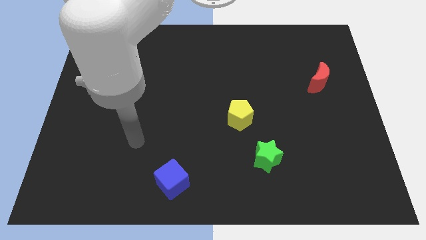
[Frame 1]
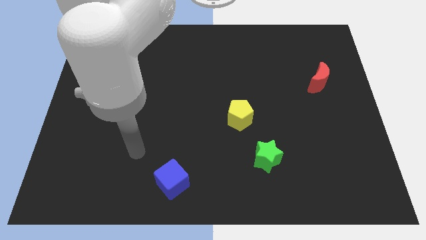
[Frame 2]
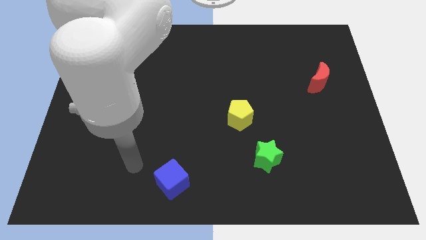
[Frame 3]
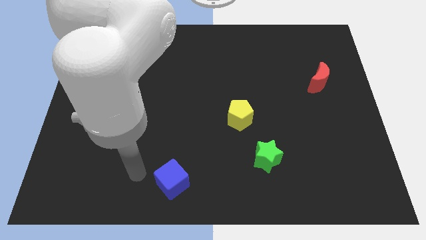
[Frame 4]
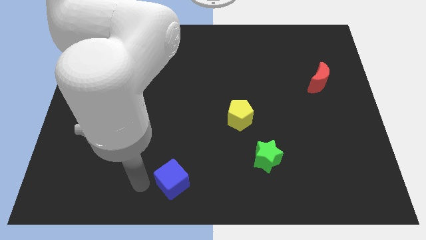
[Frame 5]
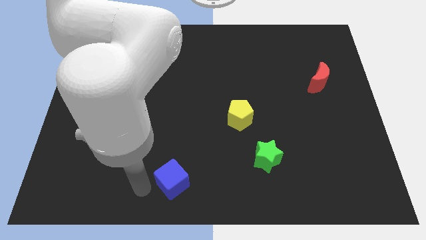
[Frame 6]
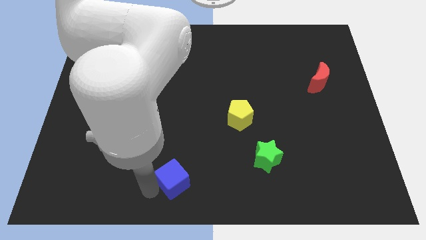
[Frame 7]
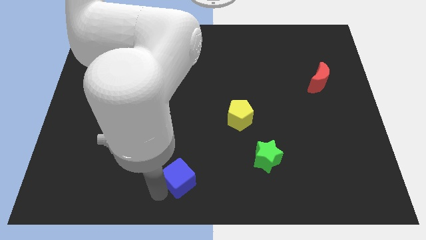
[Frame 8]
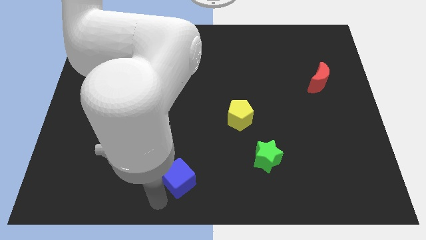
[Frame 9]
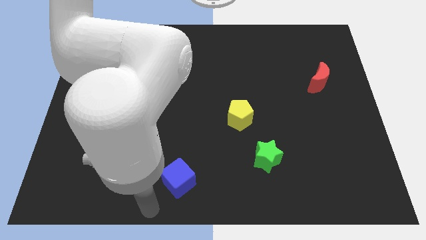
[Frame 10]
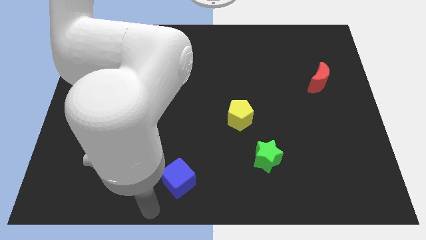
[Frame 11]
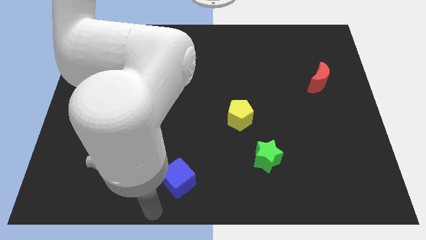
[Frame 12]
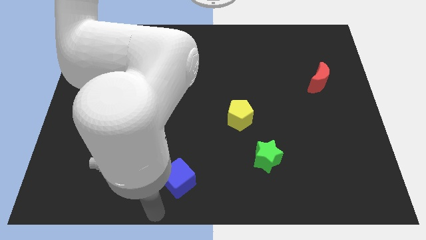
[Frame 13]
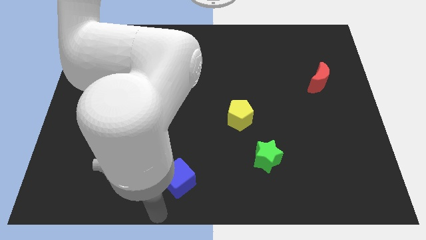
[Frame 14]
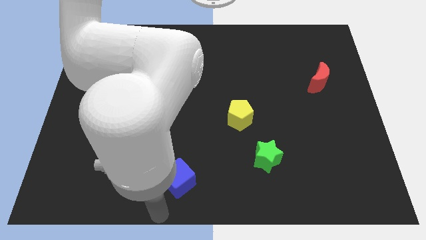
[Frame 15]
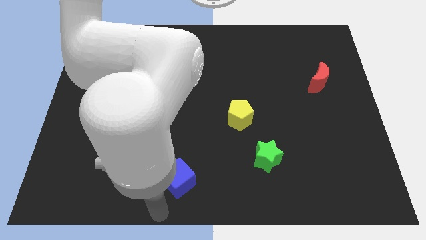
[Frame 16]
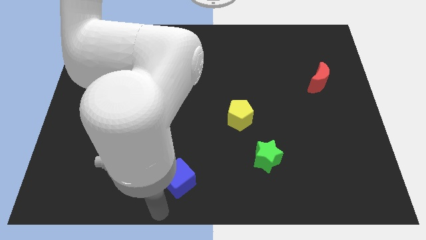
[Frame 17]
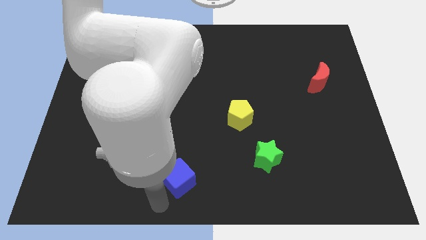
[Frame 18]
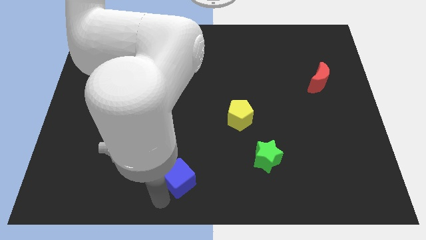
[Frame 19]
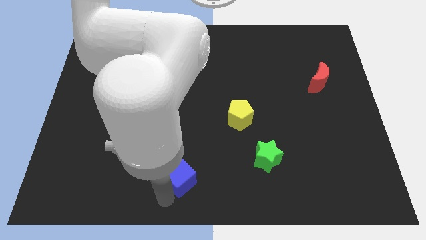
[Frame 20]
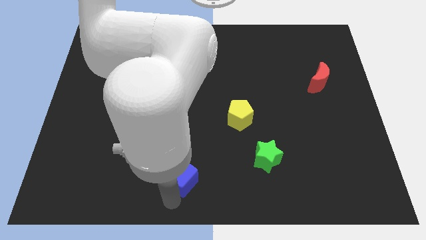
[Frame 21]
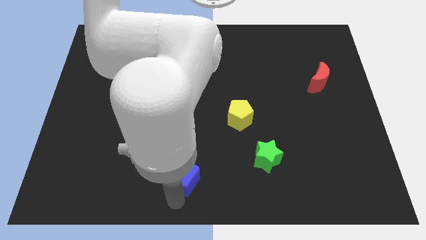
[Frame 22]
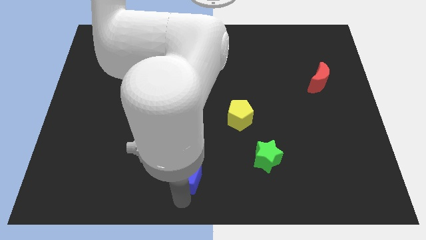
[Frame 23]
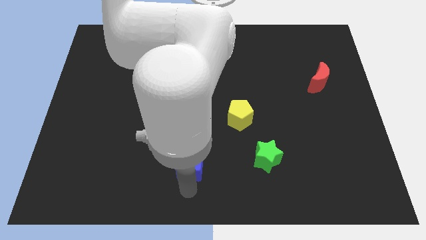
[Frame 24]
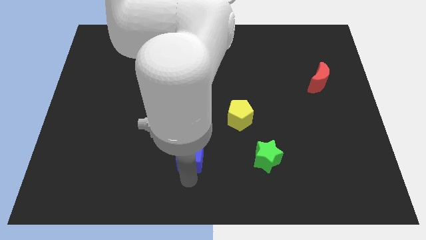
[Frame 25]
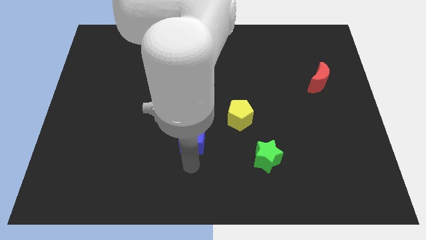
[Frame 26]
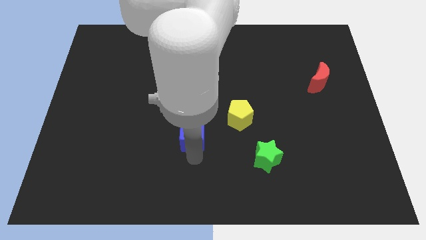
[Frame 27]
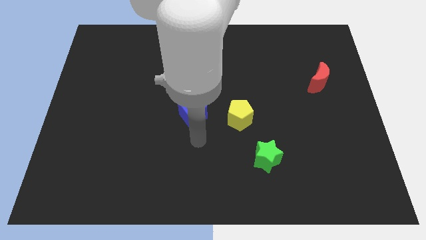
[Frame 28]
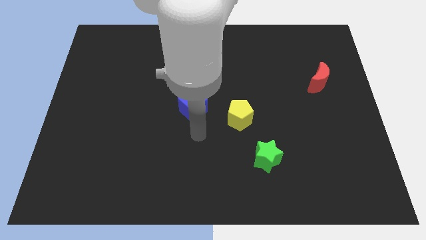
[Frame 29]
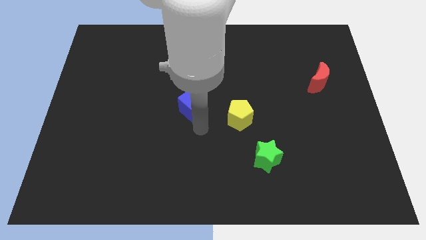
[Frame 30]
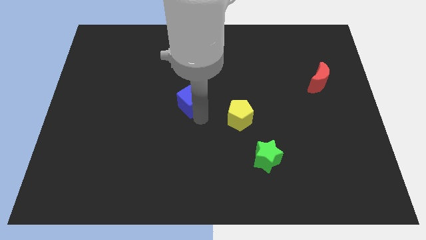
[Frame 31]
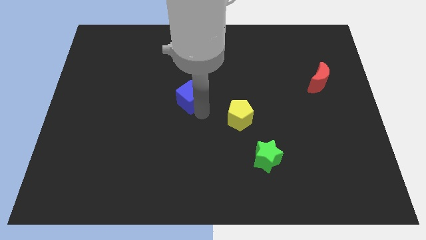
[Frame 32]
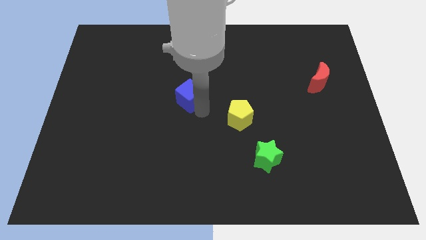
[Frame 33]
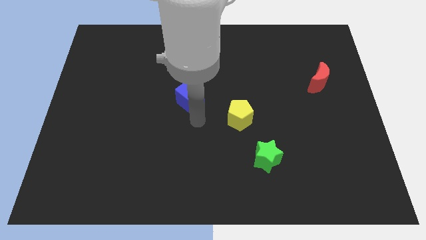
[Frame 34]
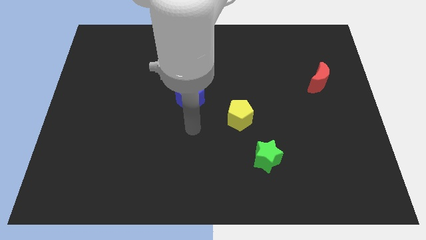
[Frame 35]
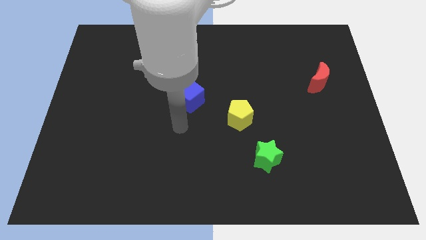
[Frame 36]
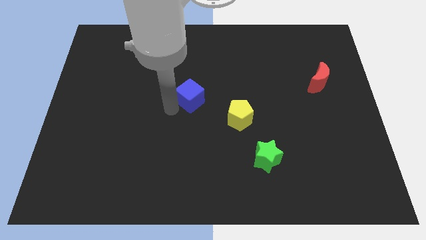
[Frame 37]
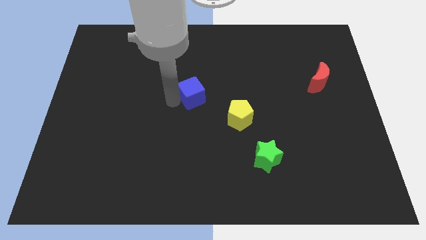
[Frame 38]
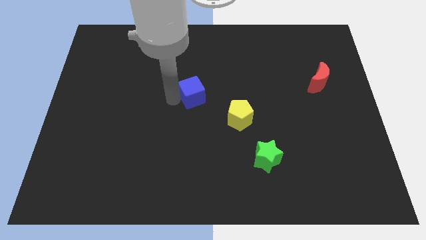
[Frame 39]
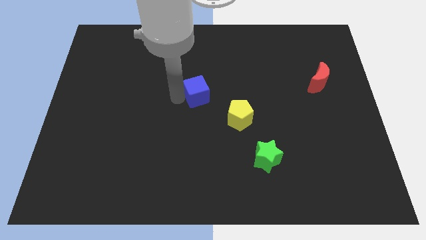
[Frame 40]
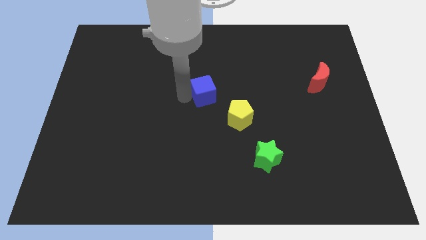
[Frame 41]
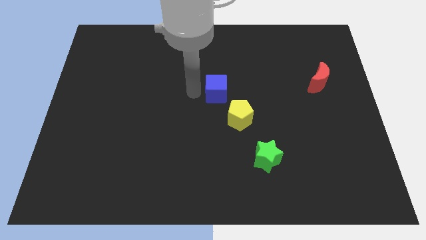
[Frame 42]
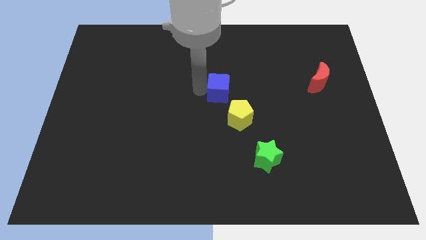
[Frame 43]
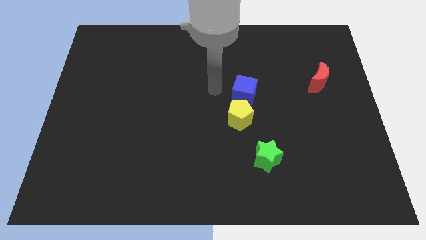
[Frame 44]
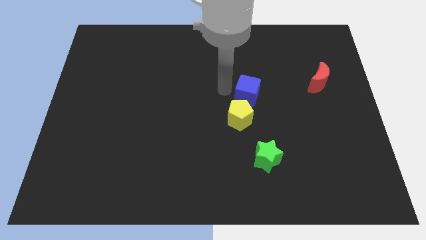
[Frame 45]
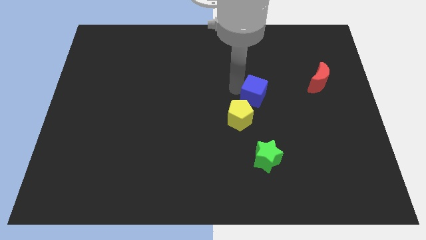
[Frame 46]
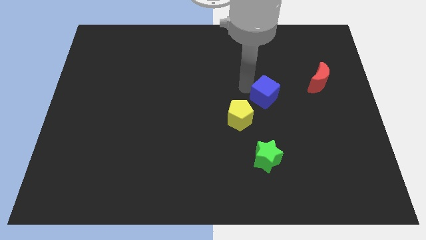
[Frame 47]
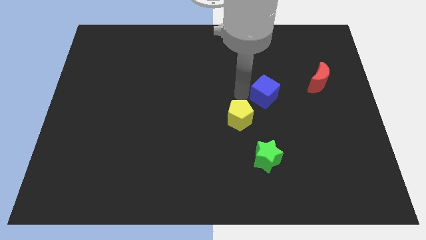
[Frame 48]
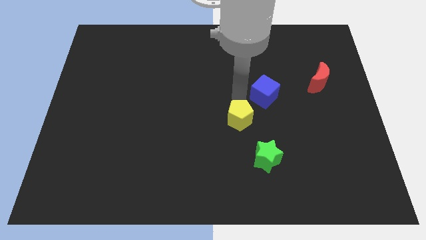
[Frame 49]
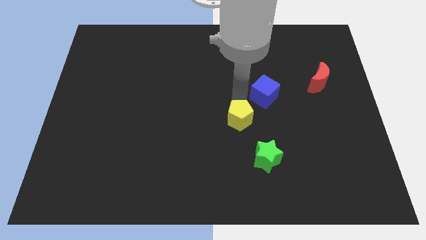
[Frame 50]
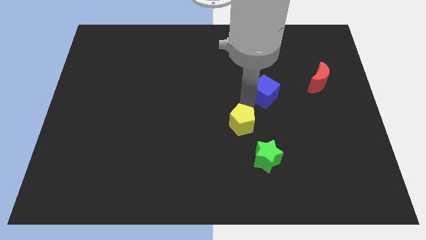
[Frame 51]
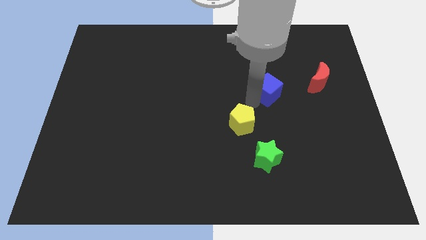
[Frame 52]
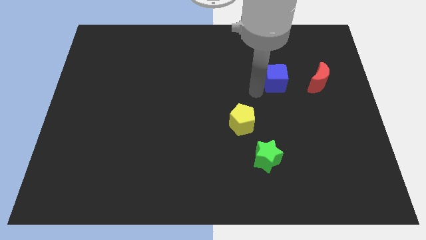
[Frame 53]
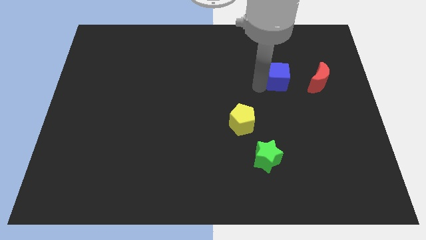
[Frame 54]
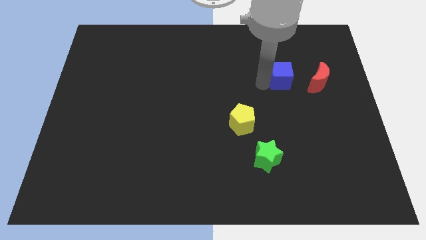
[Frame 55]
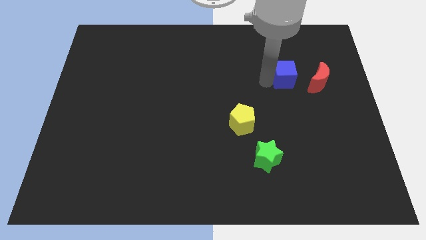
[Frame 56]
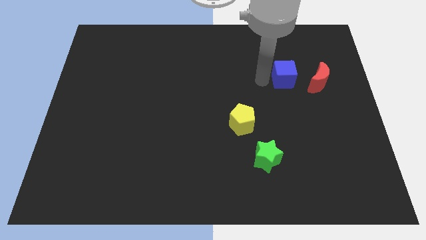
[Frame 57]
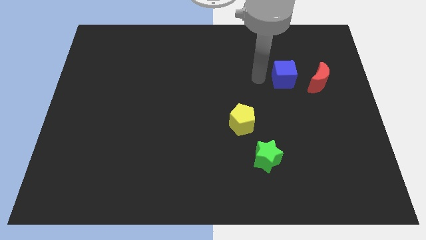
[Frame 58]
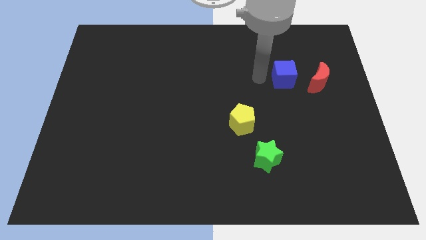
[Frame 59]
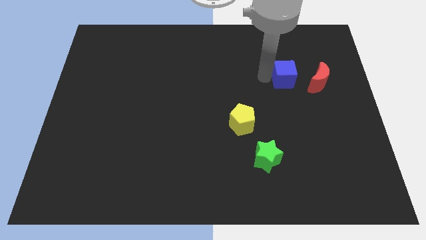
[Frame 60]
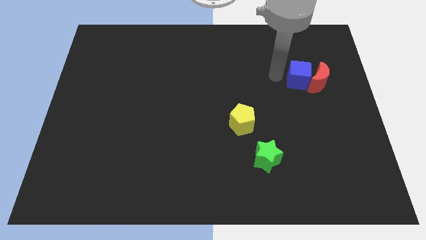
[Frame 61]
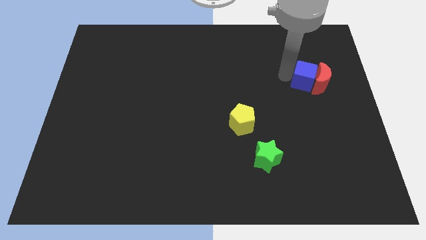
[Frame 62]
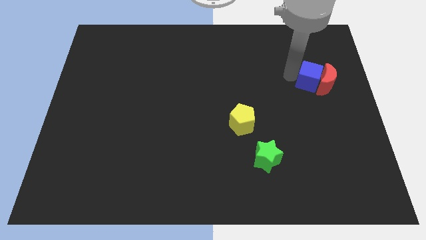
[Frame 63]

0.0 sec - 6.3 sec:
put the blue cube close to the red block

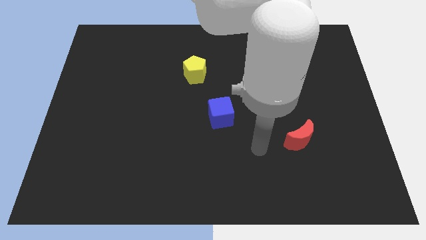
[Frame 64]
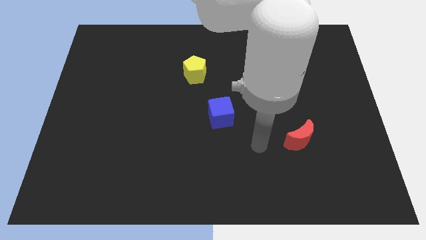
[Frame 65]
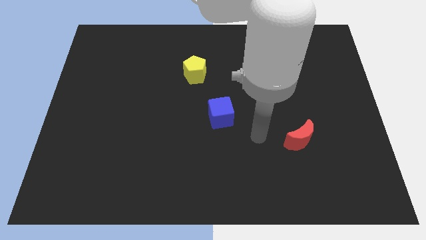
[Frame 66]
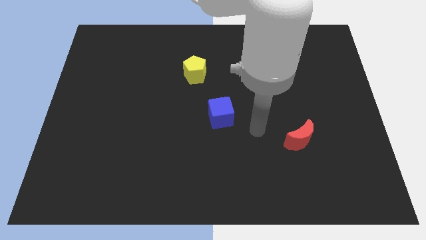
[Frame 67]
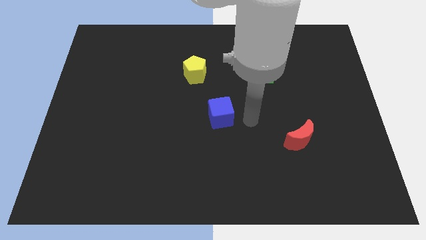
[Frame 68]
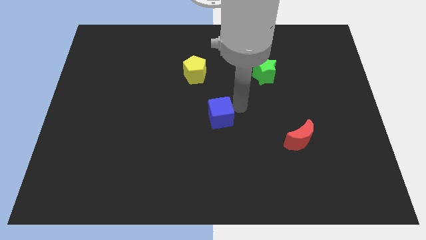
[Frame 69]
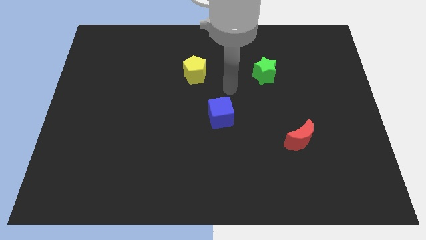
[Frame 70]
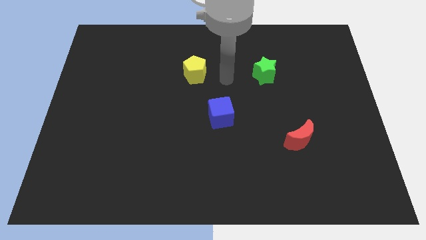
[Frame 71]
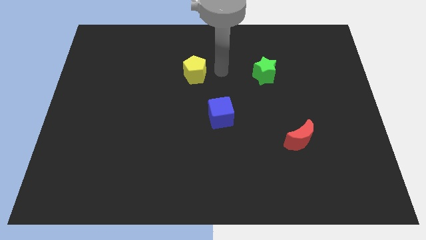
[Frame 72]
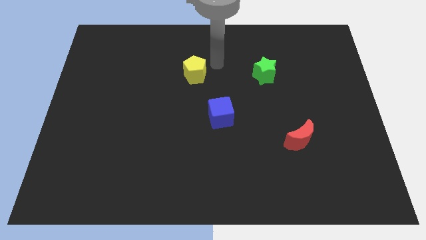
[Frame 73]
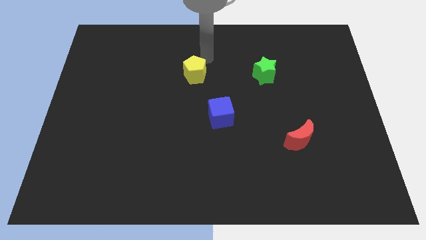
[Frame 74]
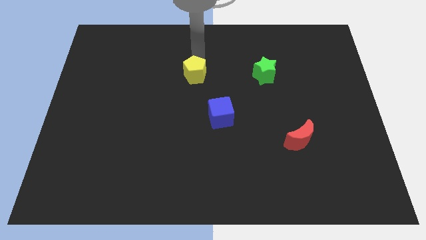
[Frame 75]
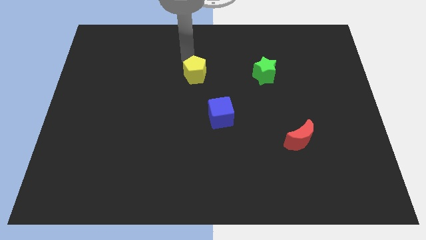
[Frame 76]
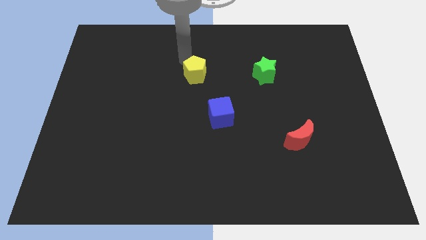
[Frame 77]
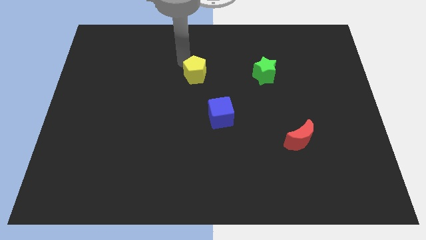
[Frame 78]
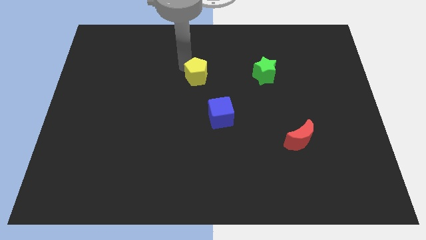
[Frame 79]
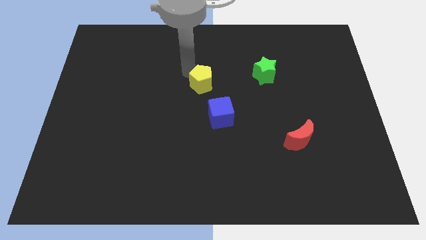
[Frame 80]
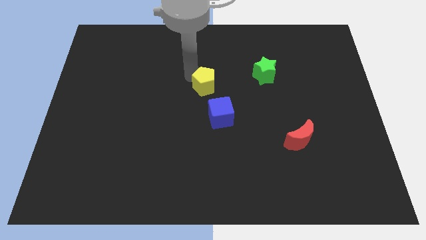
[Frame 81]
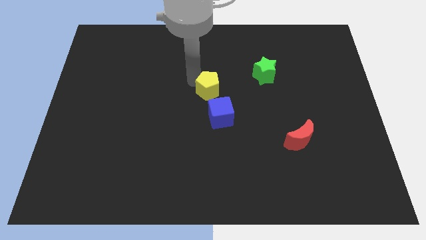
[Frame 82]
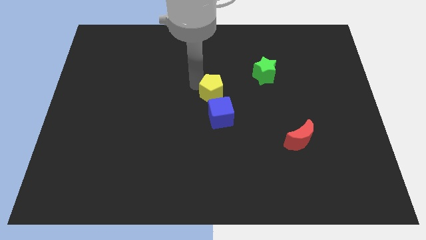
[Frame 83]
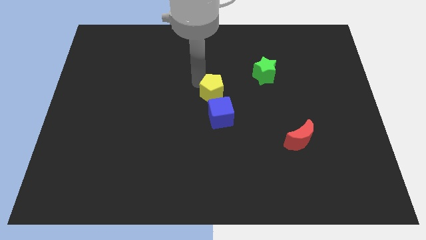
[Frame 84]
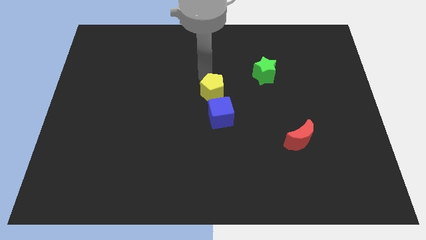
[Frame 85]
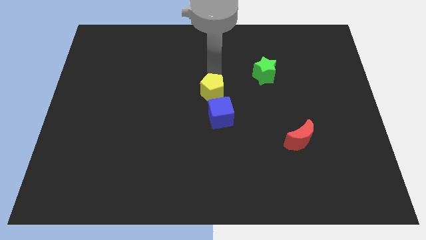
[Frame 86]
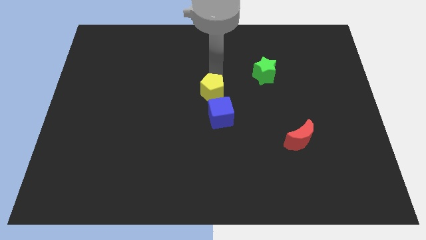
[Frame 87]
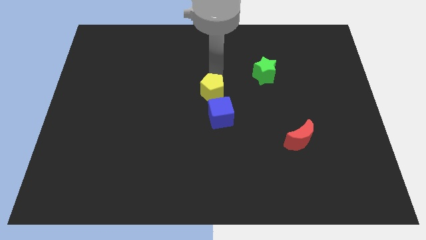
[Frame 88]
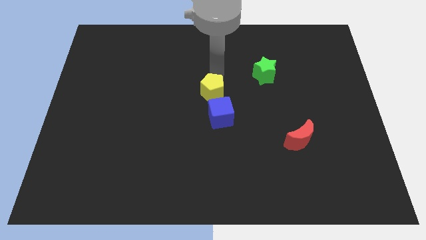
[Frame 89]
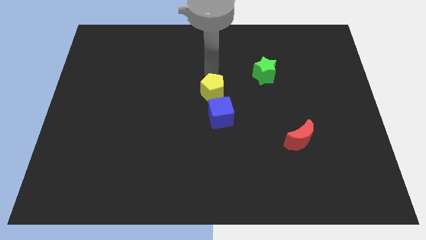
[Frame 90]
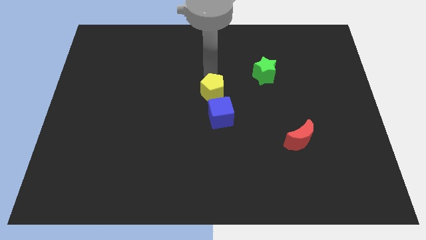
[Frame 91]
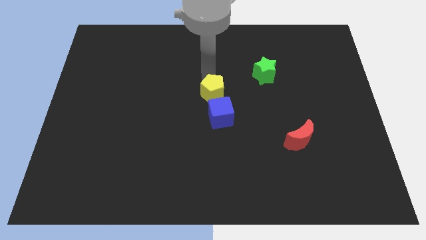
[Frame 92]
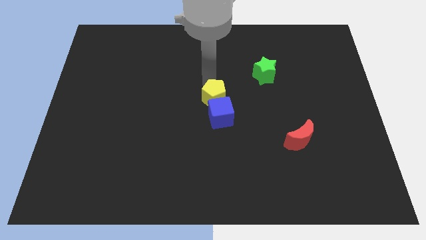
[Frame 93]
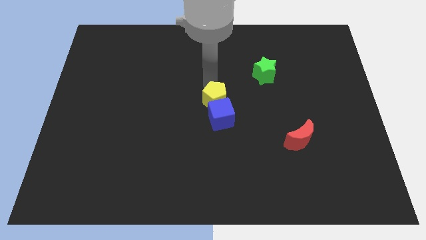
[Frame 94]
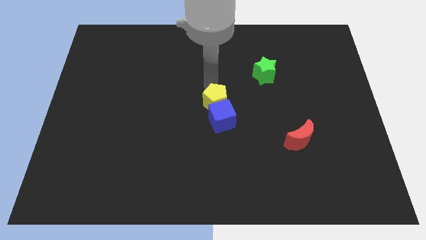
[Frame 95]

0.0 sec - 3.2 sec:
move the yellow block towards the blue block
